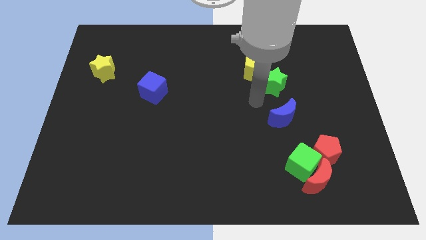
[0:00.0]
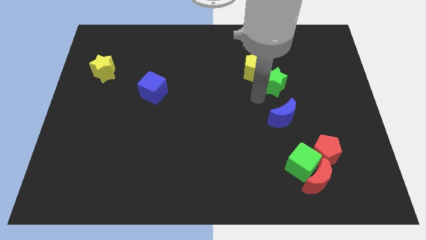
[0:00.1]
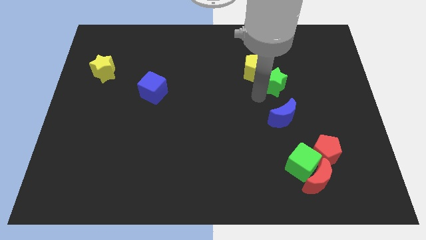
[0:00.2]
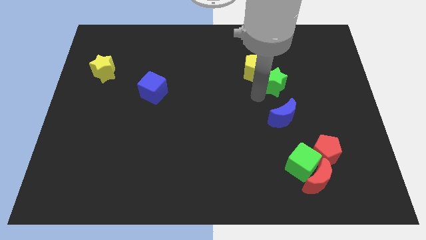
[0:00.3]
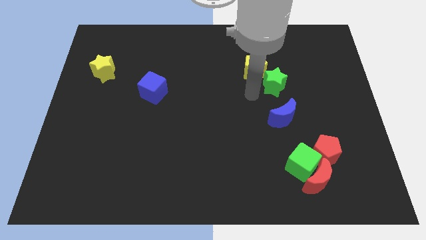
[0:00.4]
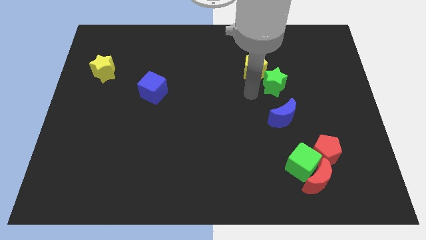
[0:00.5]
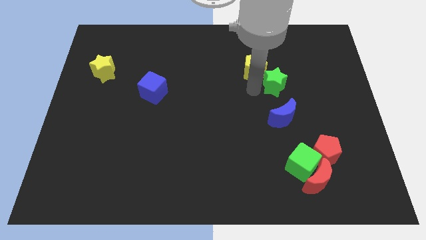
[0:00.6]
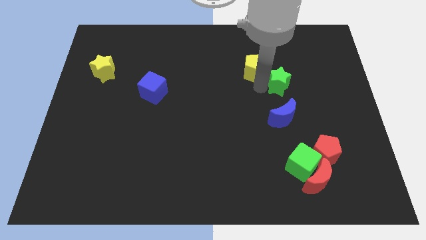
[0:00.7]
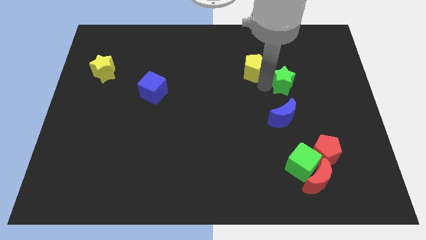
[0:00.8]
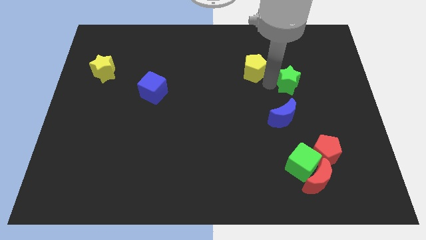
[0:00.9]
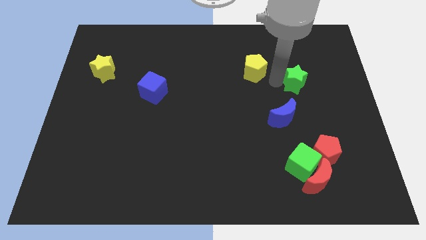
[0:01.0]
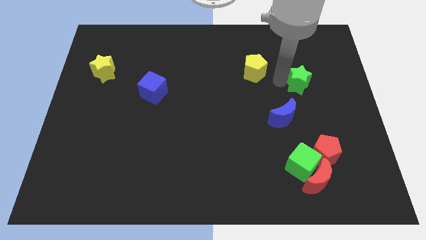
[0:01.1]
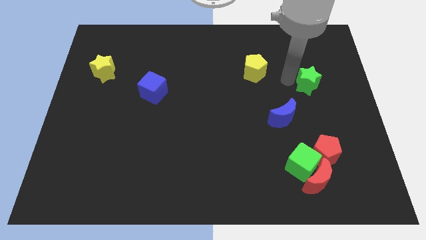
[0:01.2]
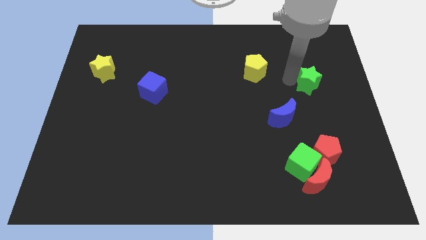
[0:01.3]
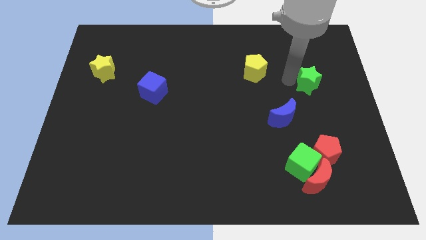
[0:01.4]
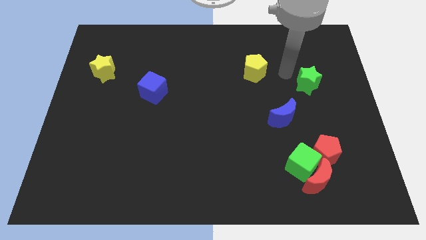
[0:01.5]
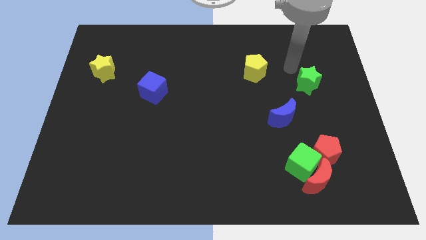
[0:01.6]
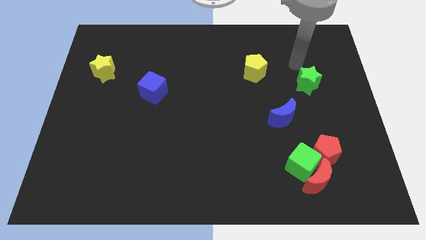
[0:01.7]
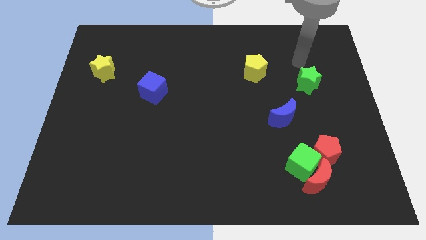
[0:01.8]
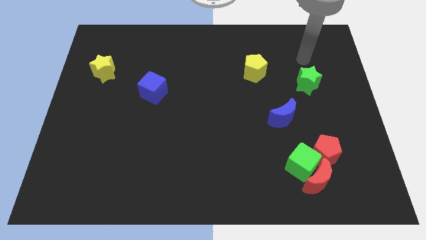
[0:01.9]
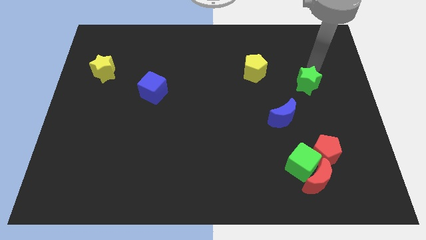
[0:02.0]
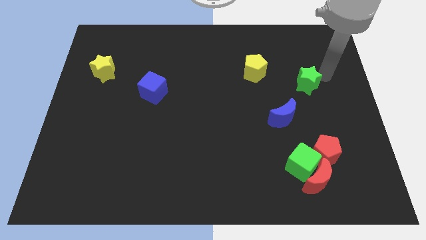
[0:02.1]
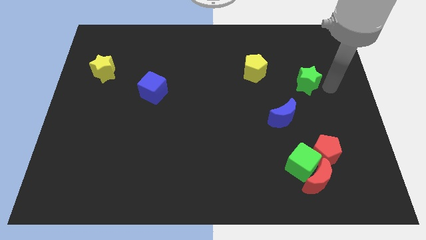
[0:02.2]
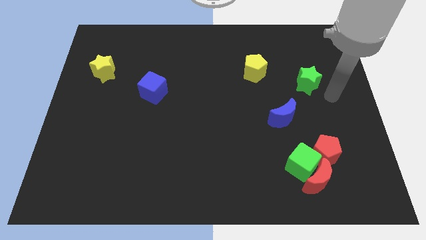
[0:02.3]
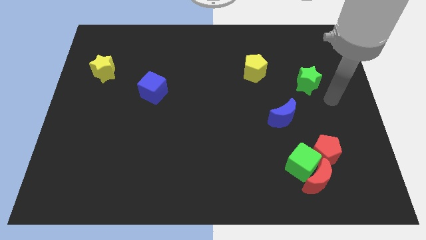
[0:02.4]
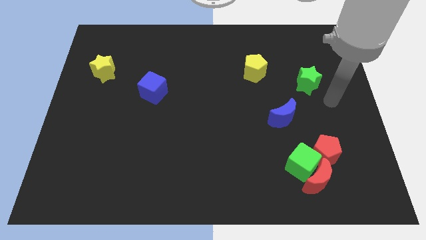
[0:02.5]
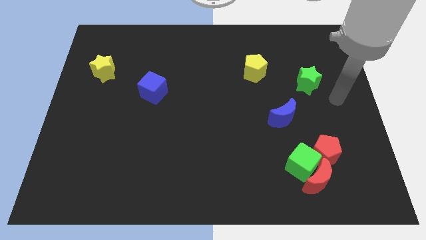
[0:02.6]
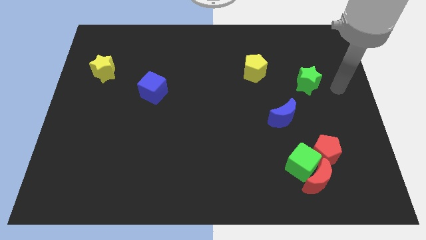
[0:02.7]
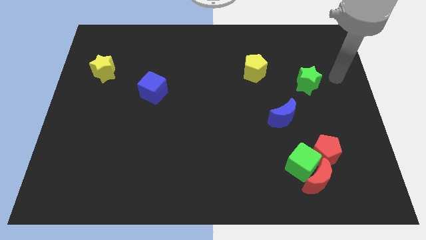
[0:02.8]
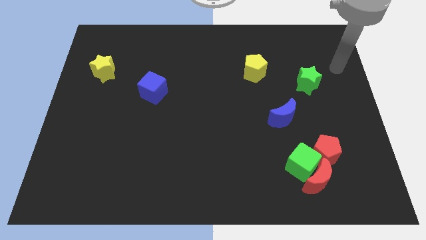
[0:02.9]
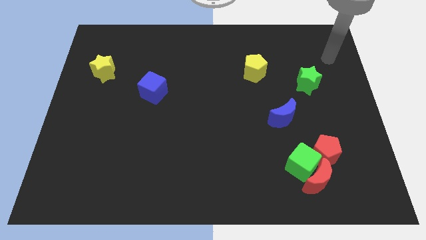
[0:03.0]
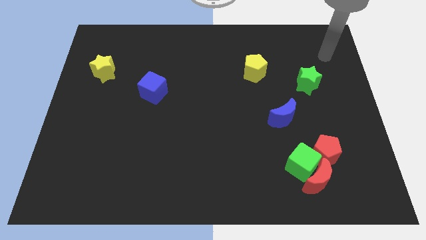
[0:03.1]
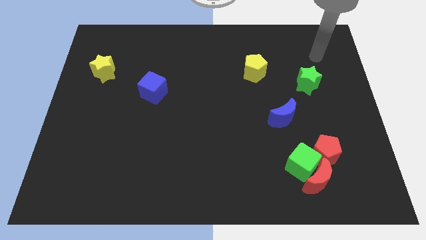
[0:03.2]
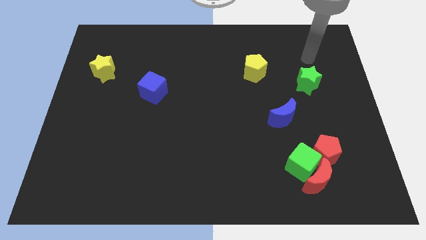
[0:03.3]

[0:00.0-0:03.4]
push the green star away from the yellow pentagon

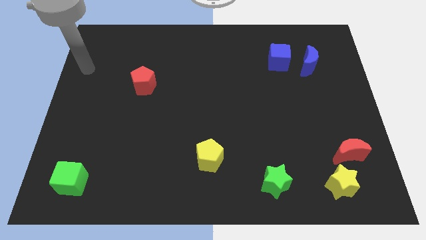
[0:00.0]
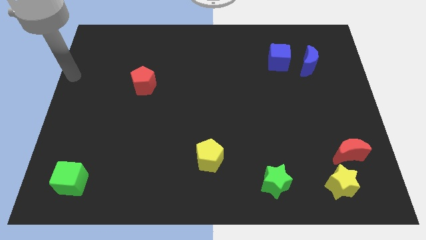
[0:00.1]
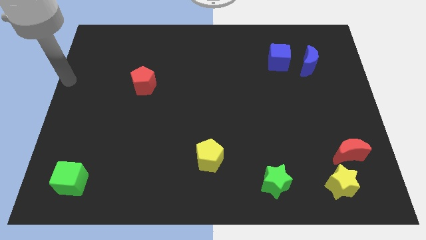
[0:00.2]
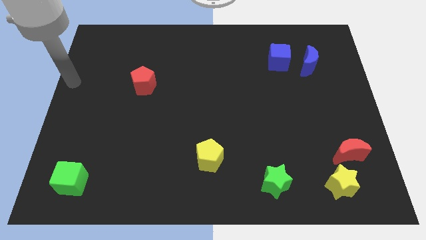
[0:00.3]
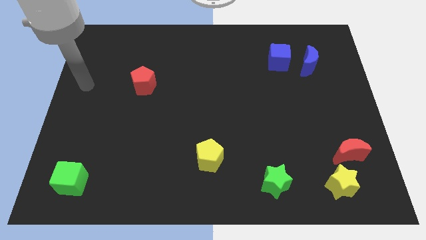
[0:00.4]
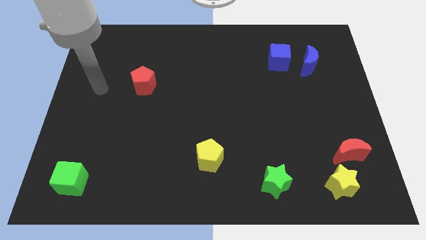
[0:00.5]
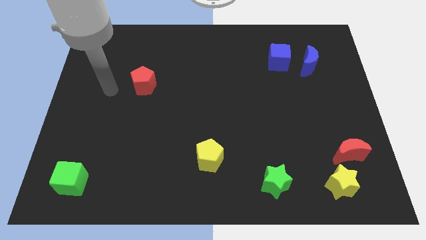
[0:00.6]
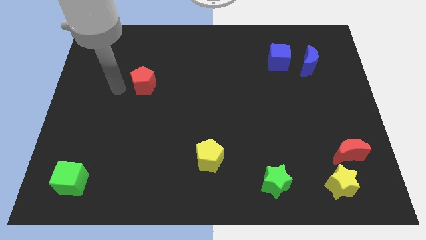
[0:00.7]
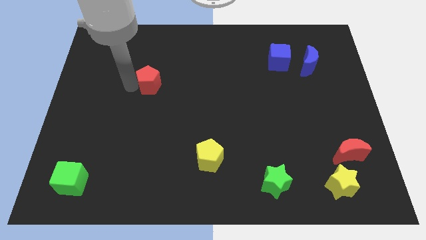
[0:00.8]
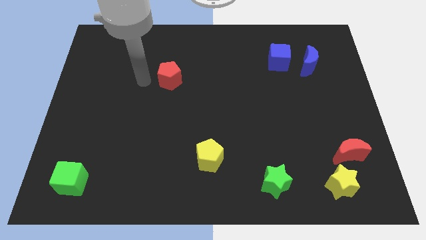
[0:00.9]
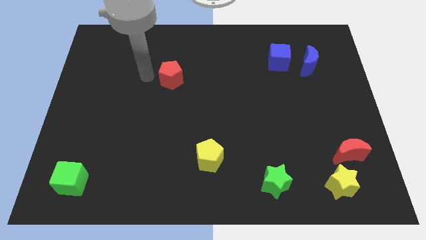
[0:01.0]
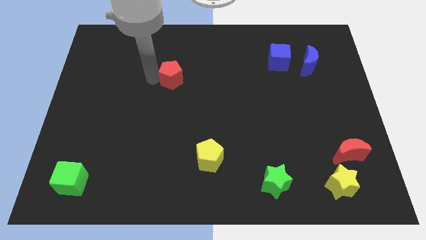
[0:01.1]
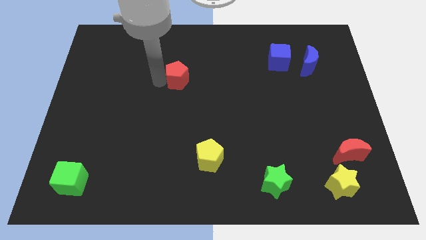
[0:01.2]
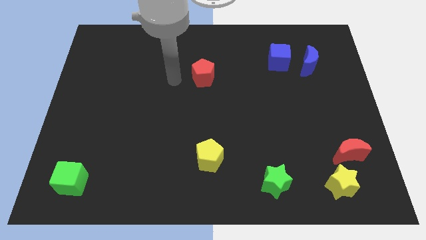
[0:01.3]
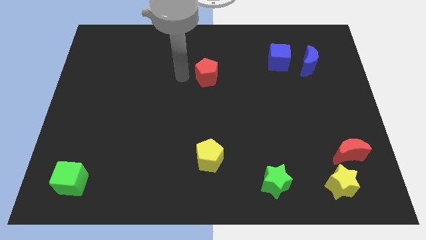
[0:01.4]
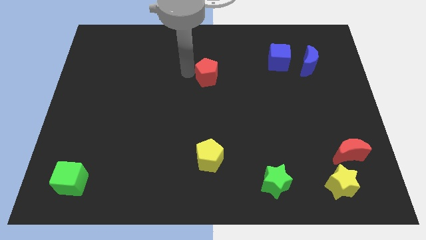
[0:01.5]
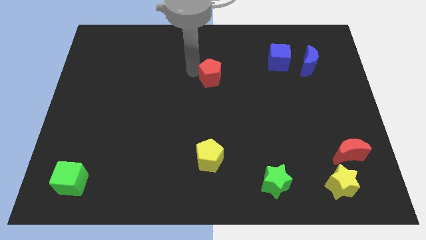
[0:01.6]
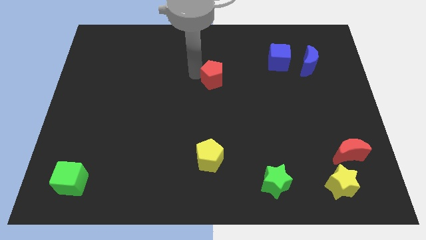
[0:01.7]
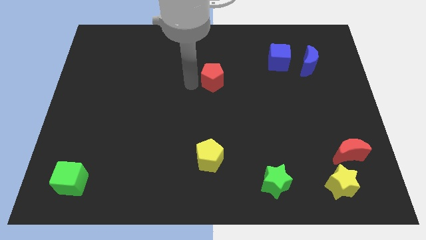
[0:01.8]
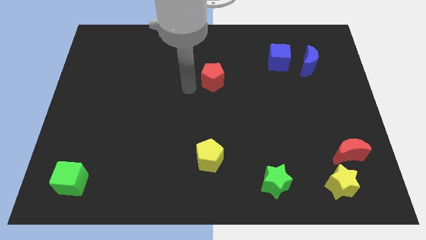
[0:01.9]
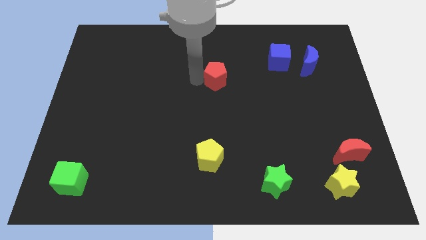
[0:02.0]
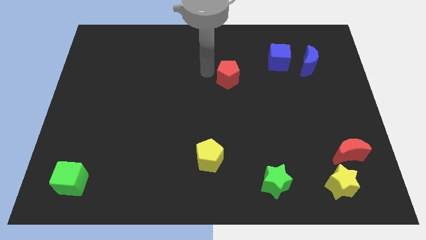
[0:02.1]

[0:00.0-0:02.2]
push the red pentagon towards the blue cube

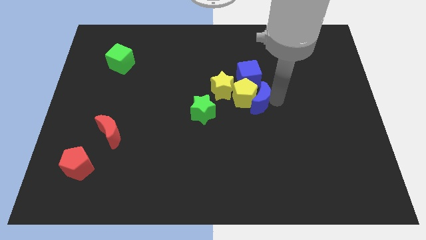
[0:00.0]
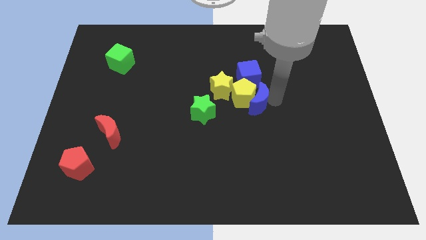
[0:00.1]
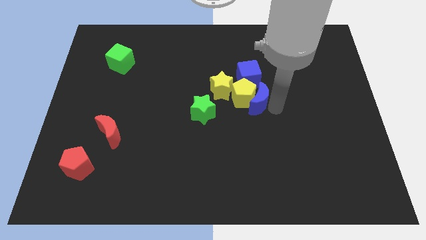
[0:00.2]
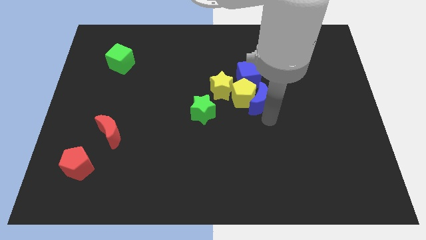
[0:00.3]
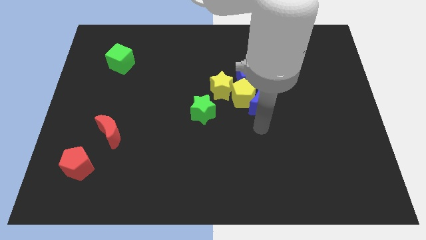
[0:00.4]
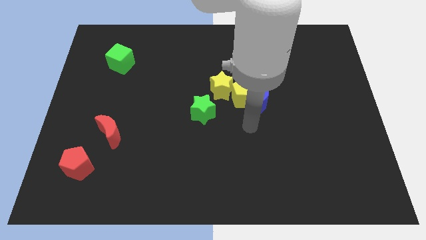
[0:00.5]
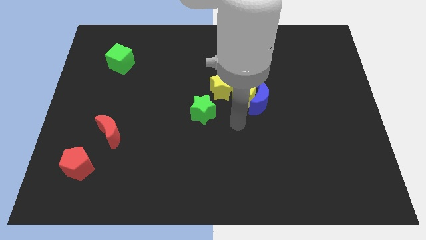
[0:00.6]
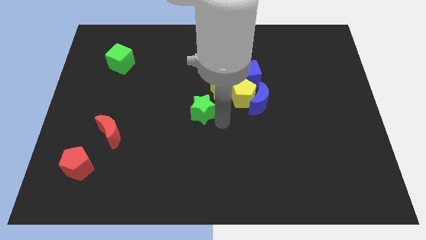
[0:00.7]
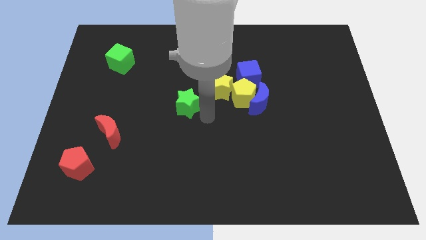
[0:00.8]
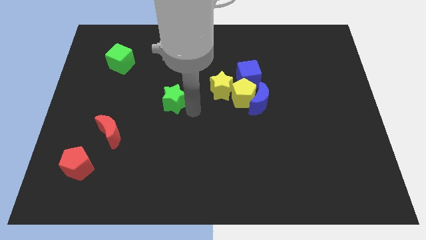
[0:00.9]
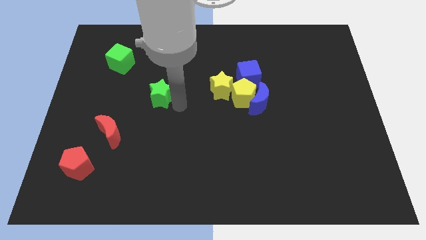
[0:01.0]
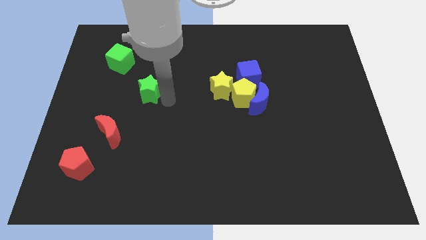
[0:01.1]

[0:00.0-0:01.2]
move your arm away from the blue moon

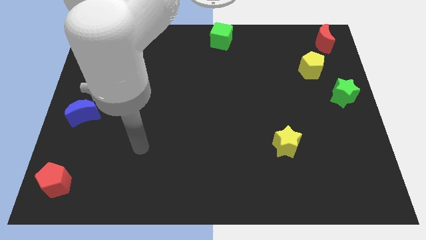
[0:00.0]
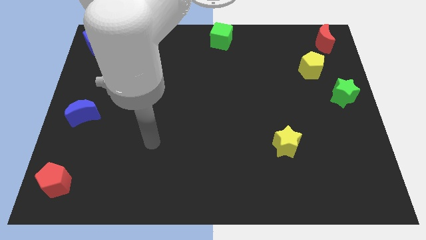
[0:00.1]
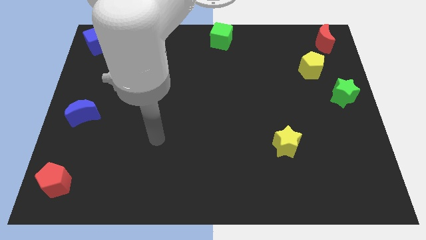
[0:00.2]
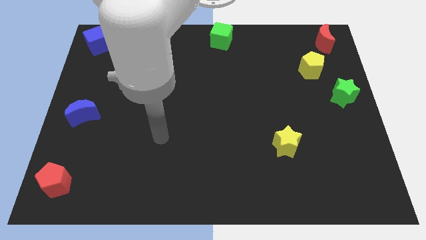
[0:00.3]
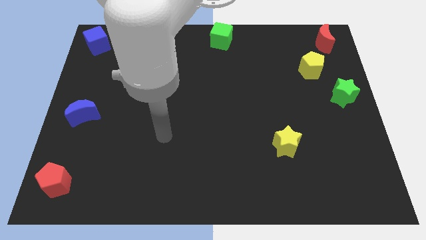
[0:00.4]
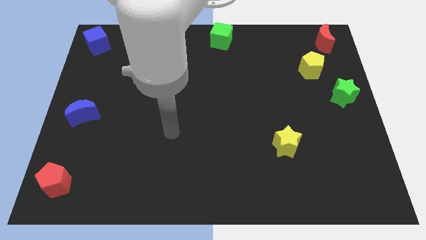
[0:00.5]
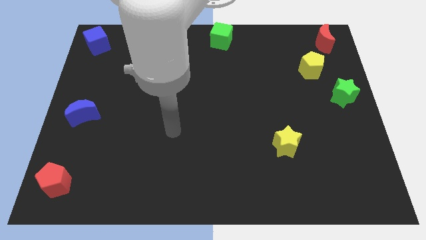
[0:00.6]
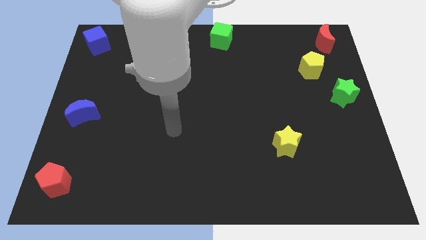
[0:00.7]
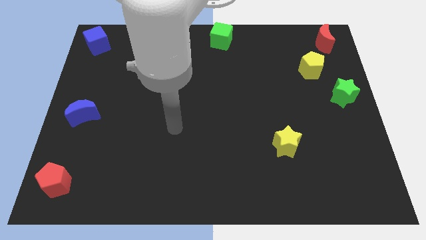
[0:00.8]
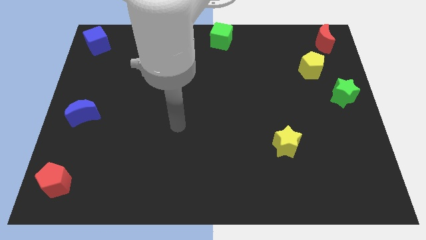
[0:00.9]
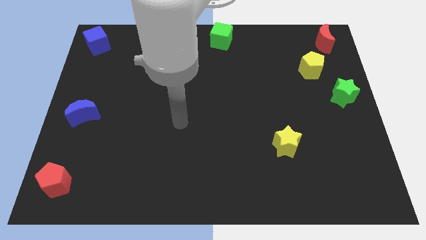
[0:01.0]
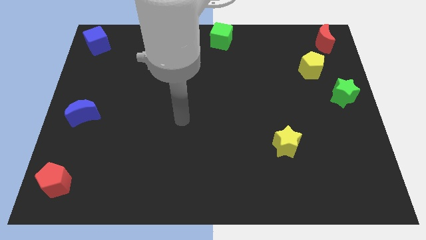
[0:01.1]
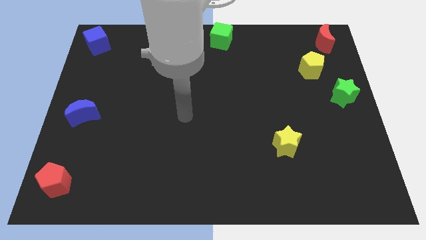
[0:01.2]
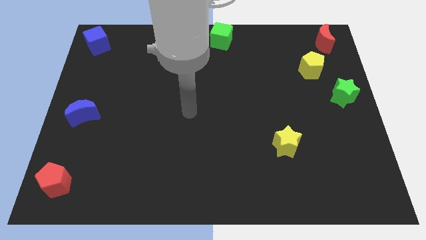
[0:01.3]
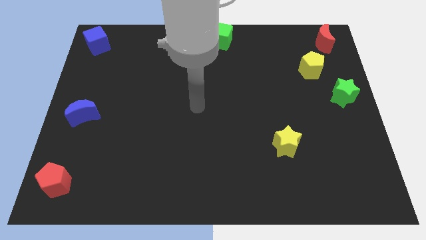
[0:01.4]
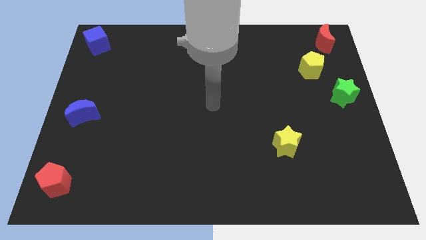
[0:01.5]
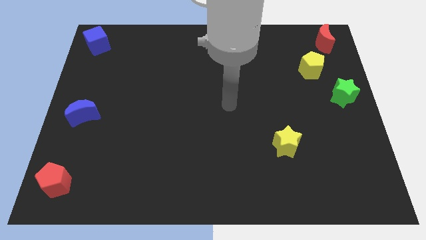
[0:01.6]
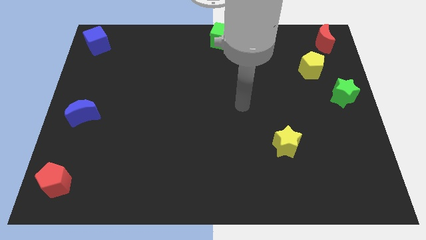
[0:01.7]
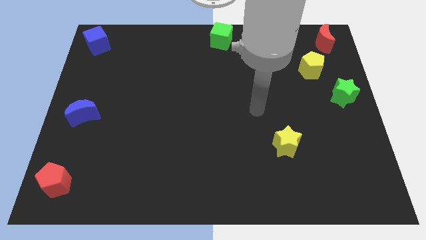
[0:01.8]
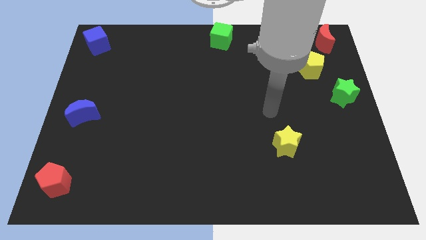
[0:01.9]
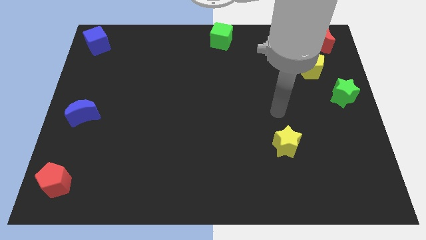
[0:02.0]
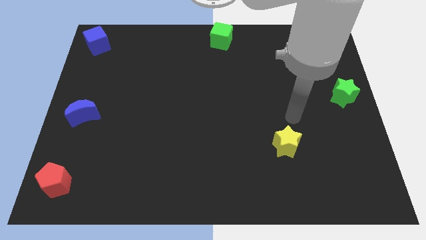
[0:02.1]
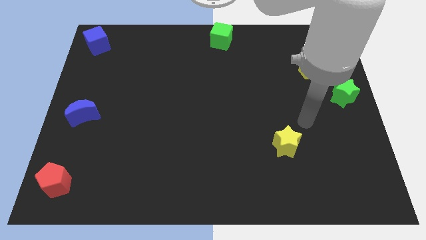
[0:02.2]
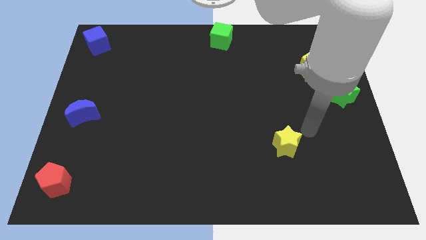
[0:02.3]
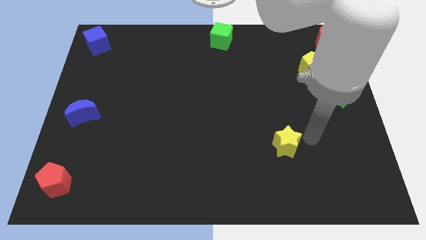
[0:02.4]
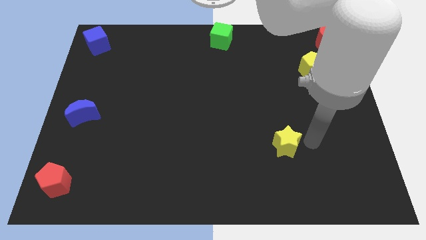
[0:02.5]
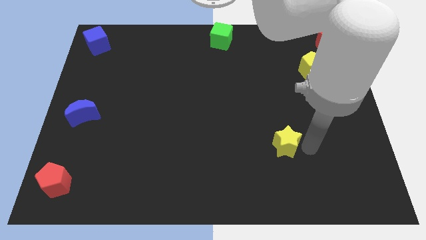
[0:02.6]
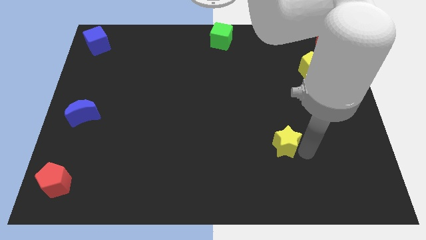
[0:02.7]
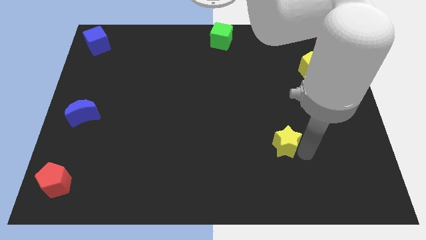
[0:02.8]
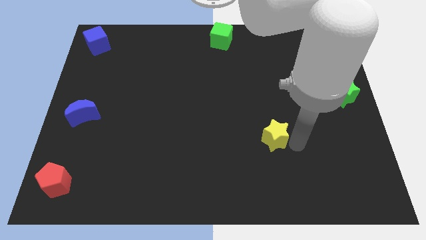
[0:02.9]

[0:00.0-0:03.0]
move your hand close to the yellow star
